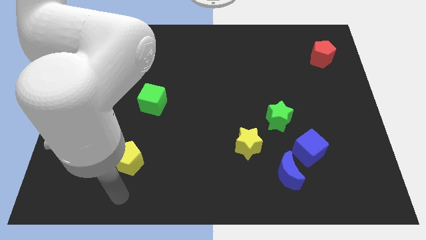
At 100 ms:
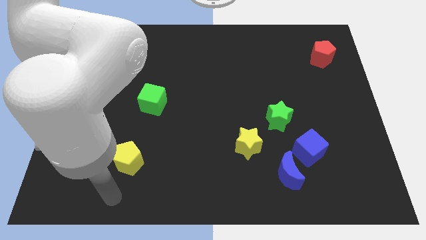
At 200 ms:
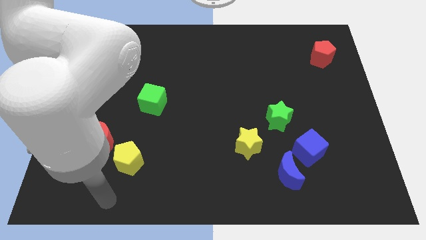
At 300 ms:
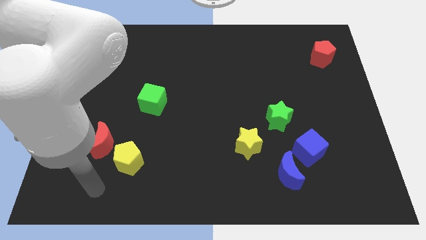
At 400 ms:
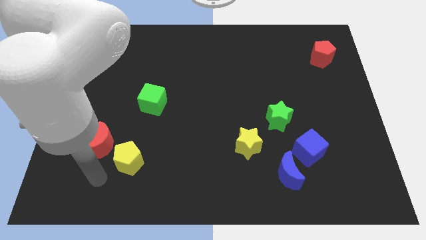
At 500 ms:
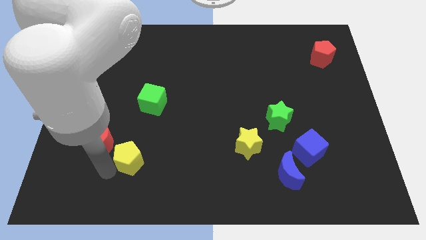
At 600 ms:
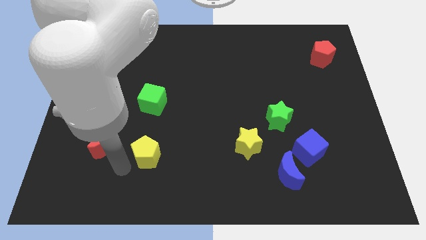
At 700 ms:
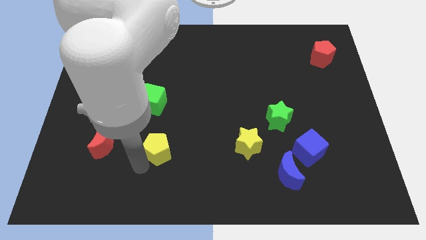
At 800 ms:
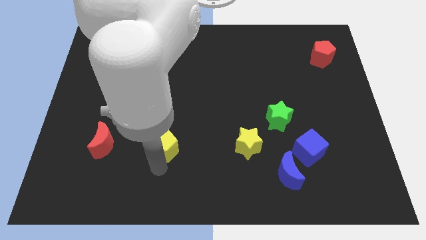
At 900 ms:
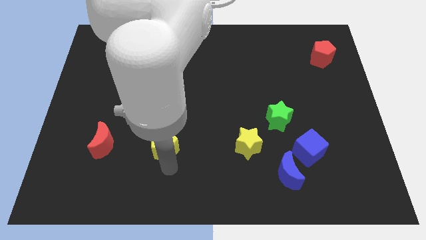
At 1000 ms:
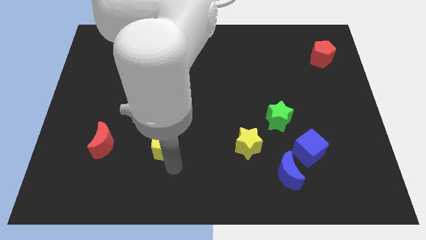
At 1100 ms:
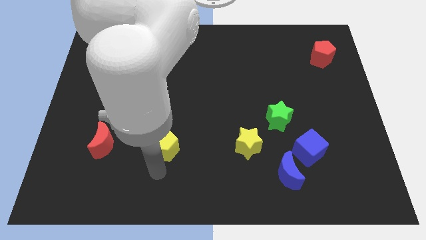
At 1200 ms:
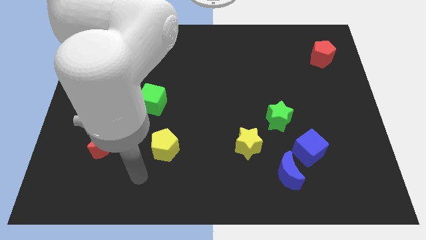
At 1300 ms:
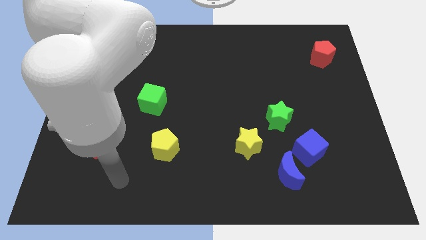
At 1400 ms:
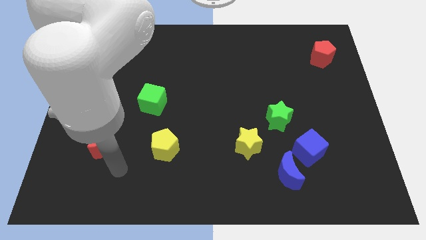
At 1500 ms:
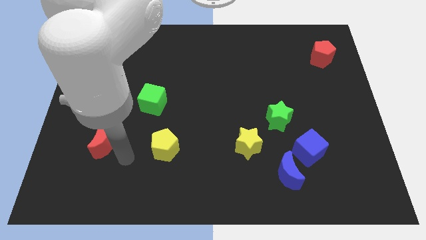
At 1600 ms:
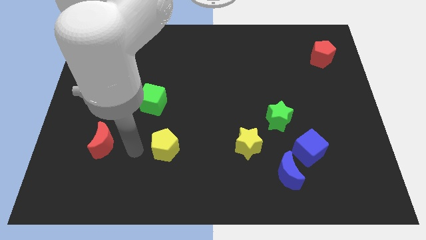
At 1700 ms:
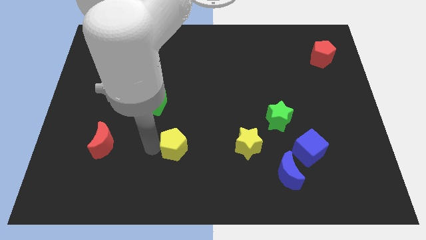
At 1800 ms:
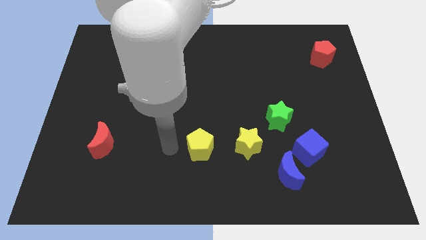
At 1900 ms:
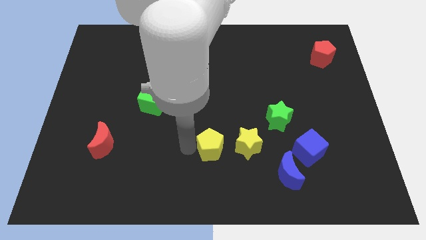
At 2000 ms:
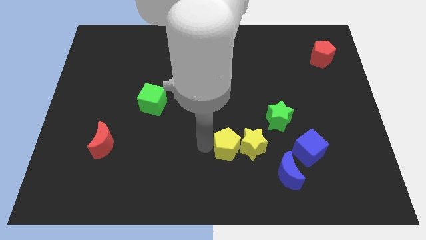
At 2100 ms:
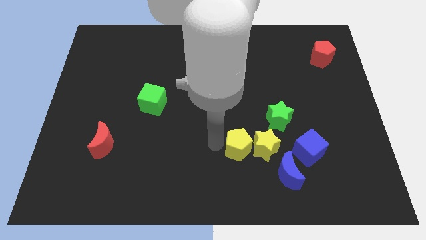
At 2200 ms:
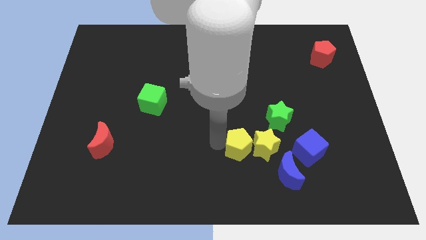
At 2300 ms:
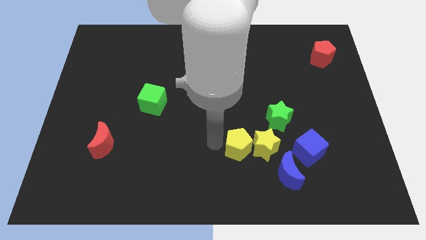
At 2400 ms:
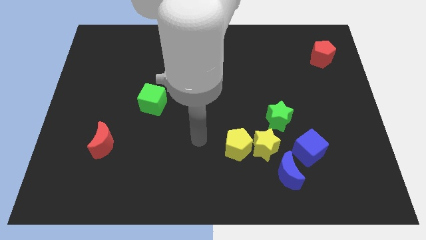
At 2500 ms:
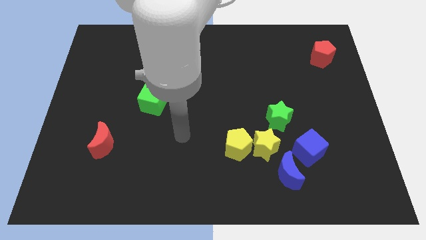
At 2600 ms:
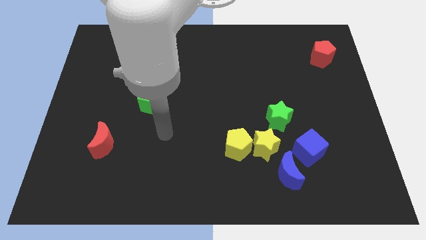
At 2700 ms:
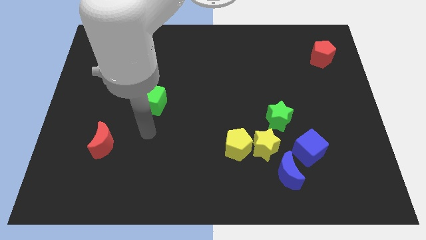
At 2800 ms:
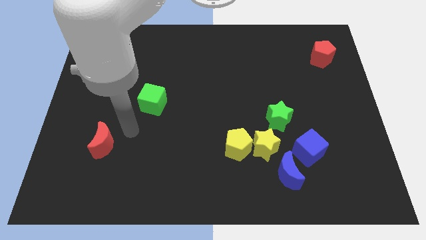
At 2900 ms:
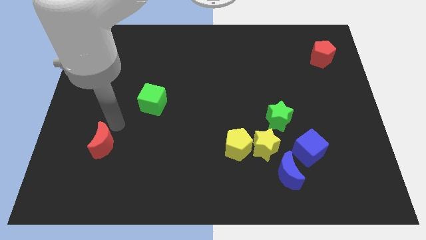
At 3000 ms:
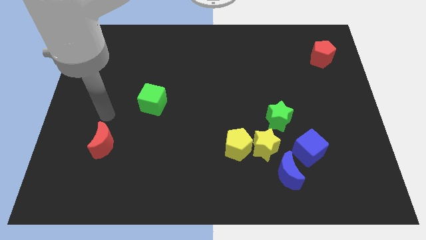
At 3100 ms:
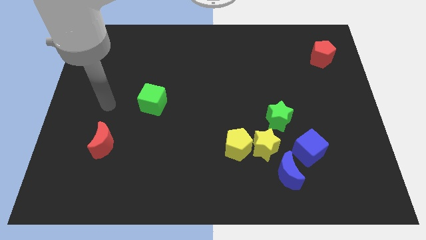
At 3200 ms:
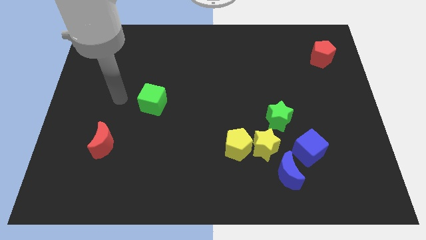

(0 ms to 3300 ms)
push the yellow blocks towards the blue blocks

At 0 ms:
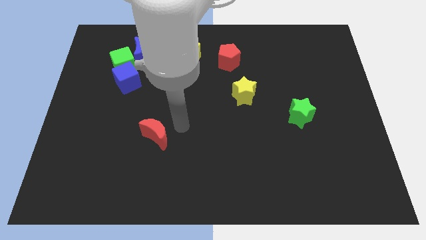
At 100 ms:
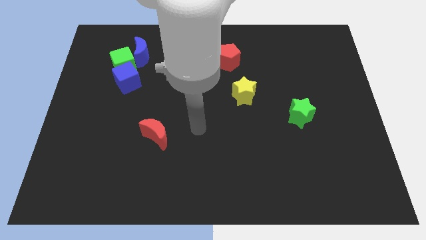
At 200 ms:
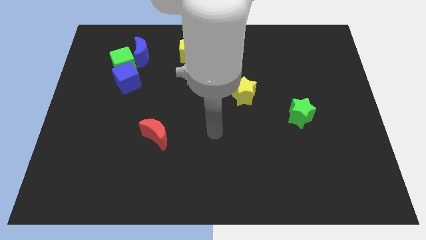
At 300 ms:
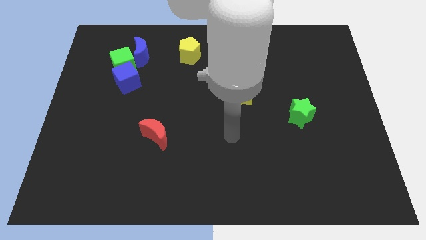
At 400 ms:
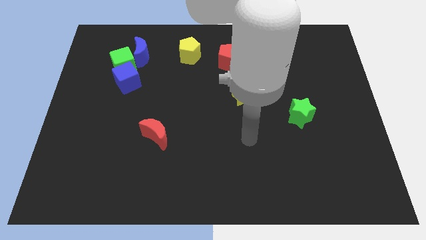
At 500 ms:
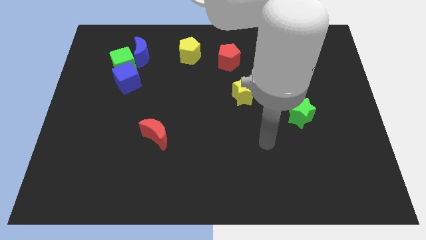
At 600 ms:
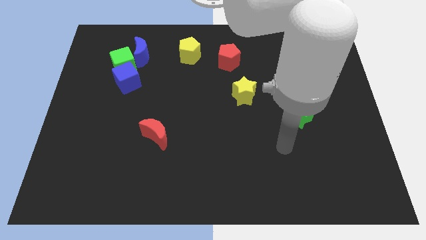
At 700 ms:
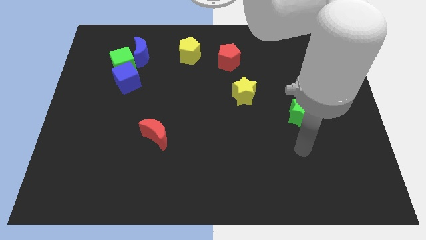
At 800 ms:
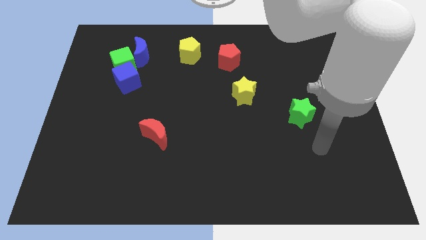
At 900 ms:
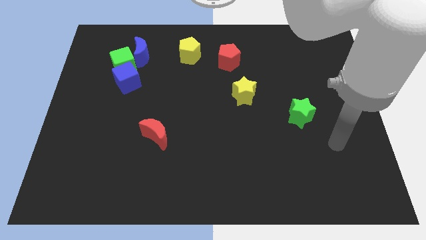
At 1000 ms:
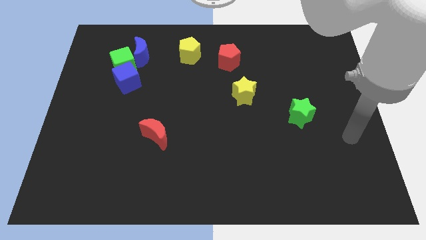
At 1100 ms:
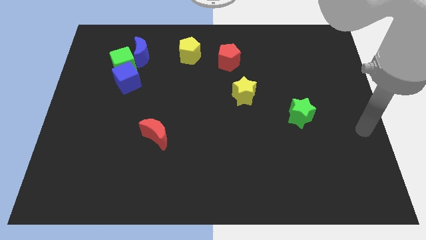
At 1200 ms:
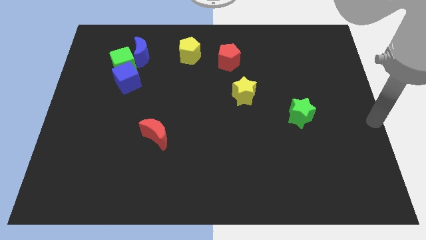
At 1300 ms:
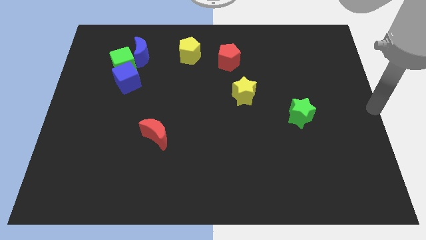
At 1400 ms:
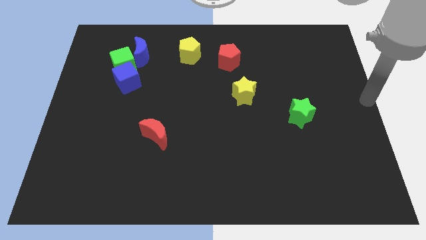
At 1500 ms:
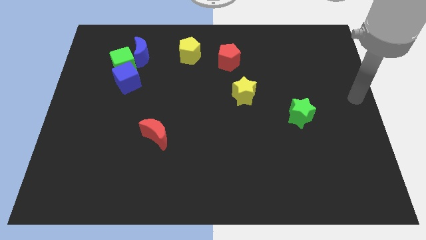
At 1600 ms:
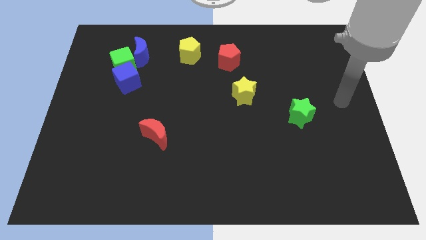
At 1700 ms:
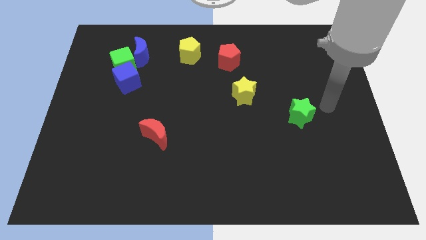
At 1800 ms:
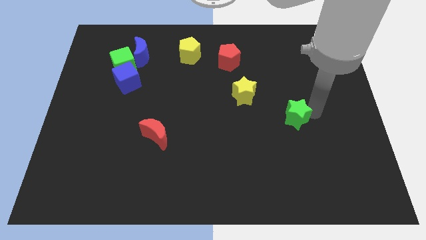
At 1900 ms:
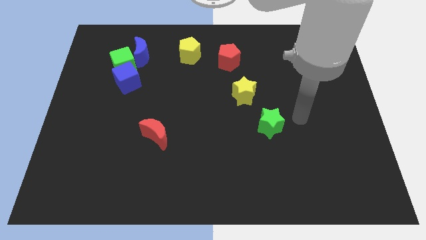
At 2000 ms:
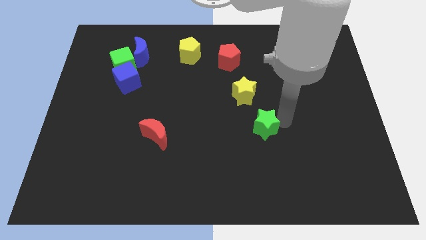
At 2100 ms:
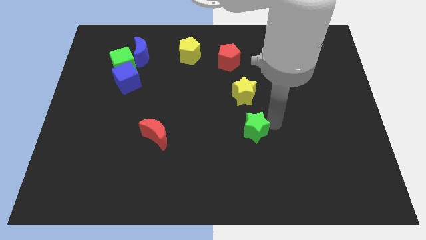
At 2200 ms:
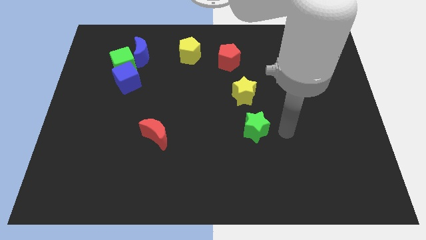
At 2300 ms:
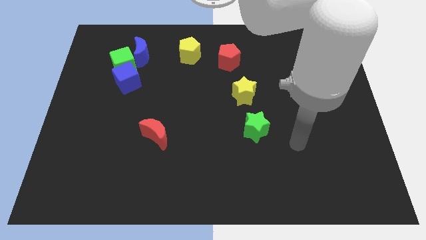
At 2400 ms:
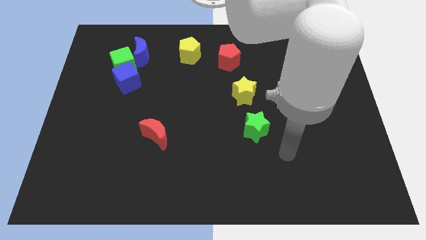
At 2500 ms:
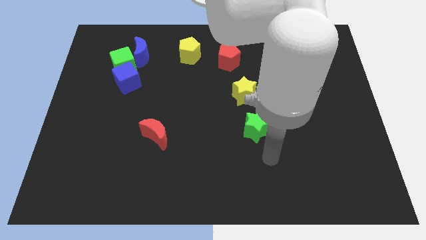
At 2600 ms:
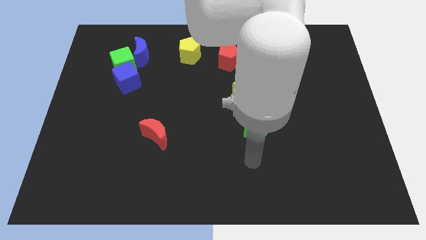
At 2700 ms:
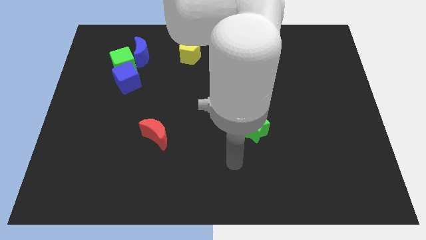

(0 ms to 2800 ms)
place the green star below to the yellow star

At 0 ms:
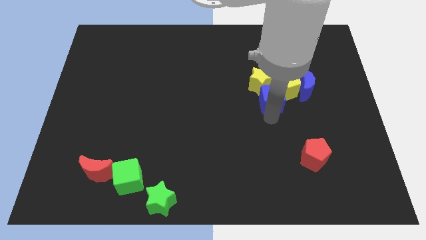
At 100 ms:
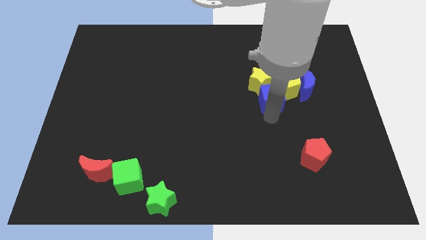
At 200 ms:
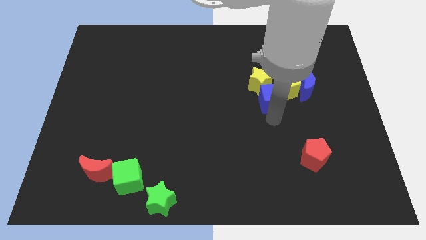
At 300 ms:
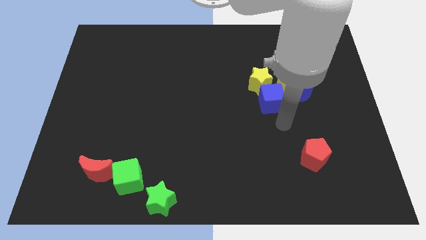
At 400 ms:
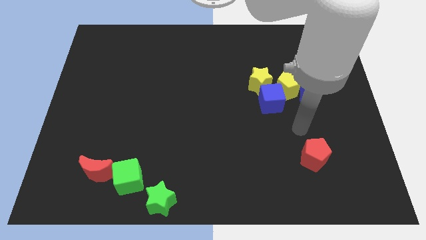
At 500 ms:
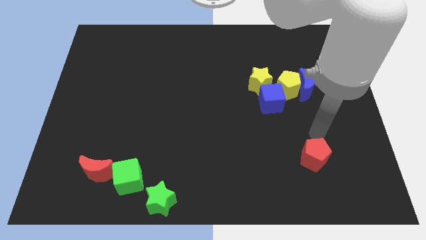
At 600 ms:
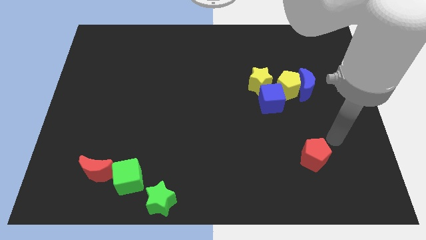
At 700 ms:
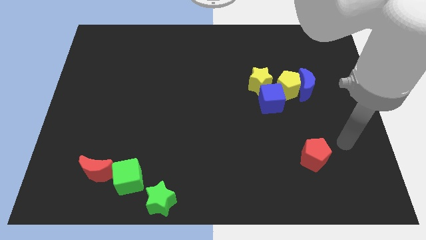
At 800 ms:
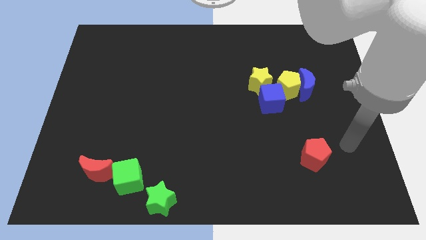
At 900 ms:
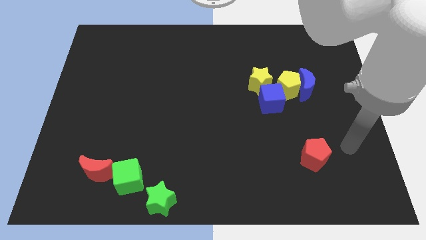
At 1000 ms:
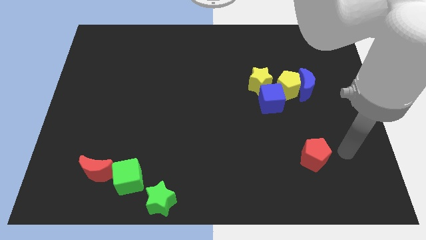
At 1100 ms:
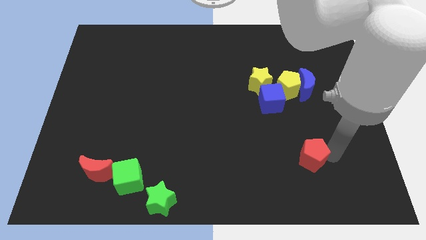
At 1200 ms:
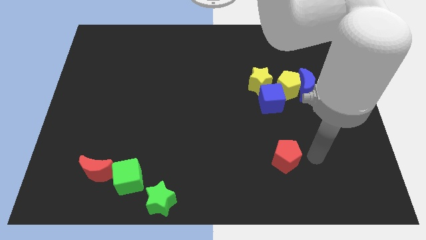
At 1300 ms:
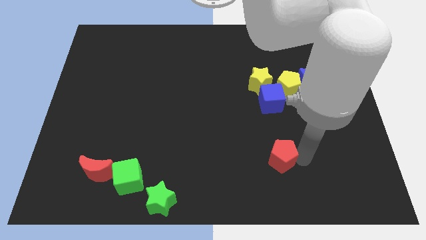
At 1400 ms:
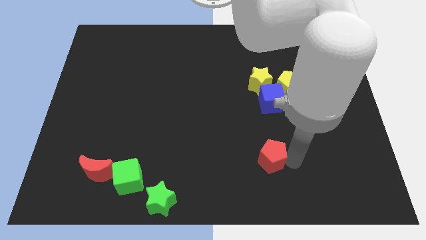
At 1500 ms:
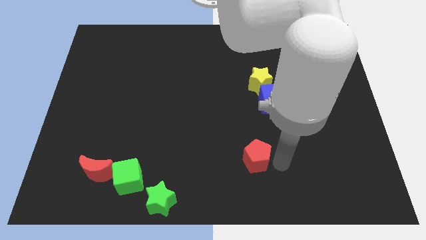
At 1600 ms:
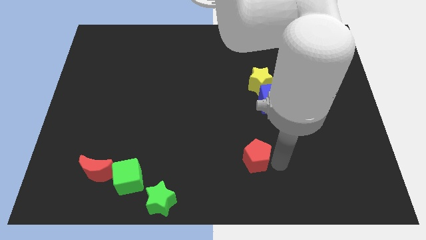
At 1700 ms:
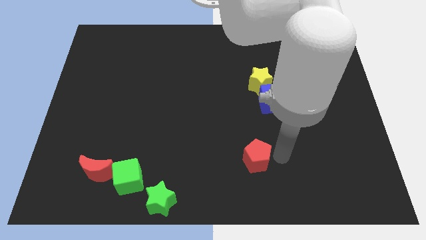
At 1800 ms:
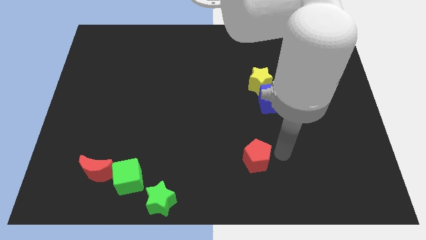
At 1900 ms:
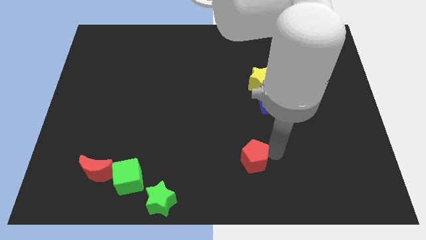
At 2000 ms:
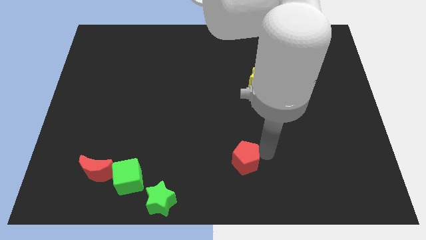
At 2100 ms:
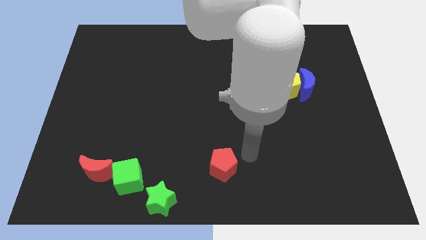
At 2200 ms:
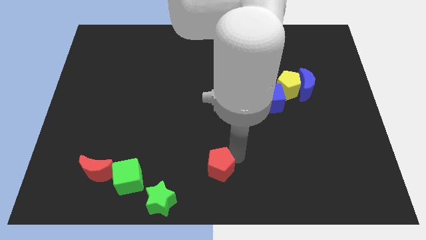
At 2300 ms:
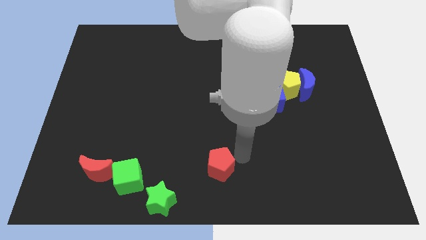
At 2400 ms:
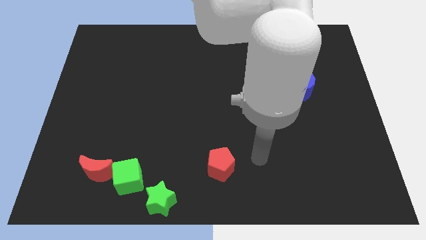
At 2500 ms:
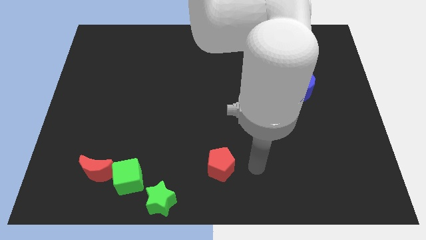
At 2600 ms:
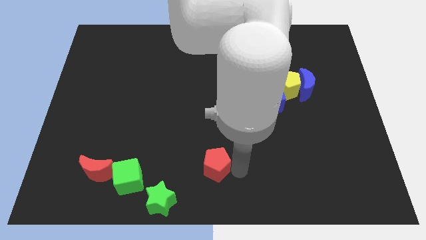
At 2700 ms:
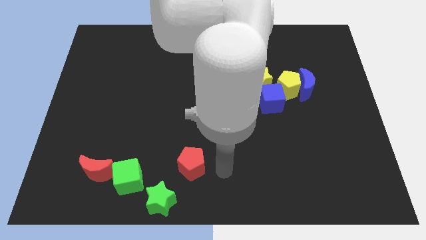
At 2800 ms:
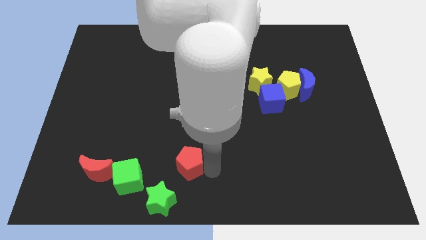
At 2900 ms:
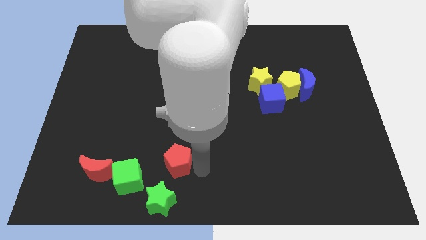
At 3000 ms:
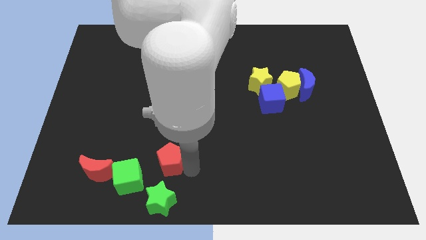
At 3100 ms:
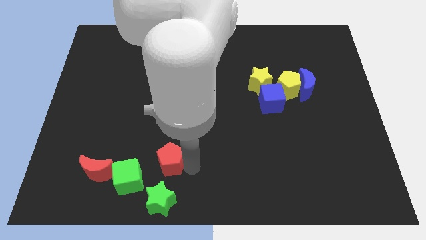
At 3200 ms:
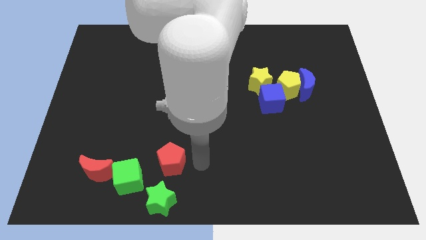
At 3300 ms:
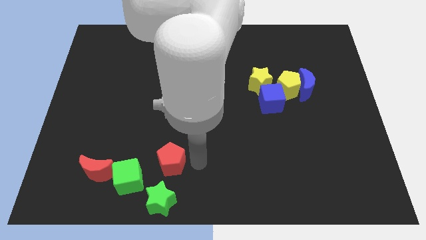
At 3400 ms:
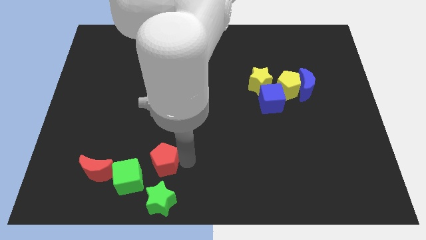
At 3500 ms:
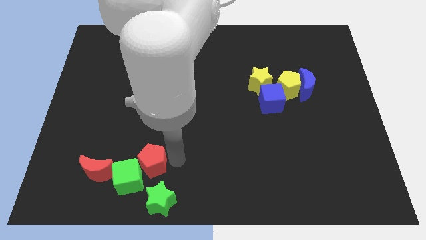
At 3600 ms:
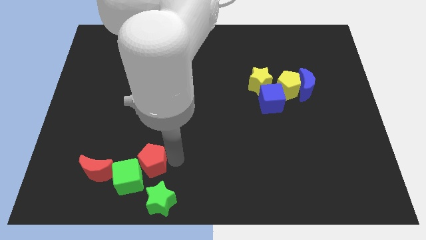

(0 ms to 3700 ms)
move the red pentagon into the right side of the green cube
